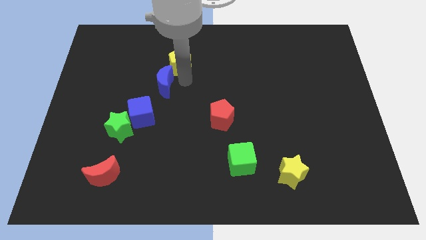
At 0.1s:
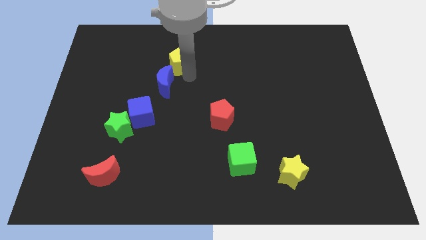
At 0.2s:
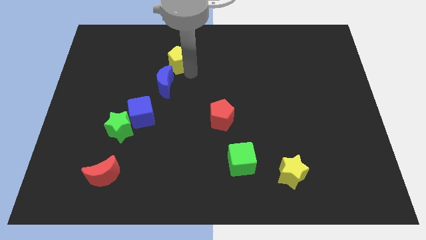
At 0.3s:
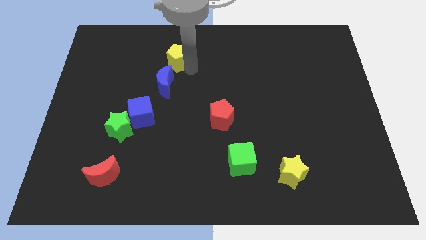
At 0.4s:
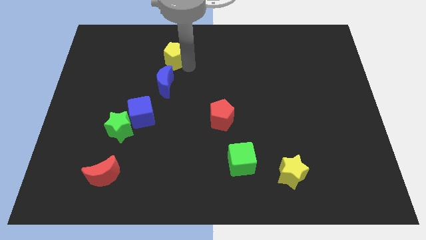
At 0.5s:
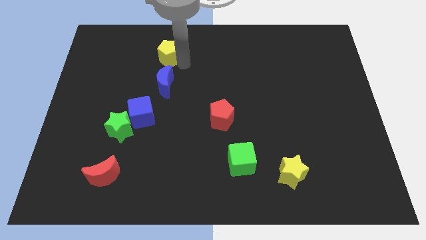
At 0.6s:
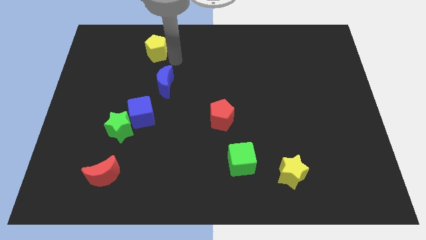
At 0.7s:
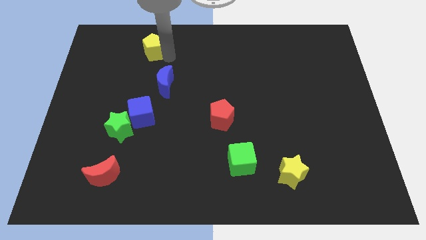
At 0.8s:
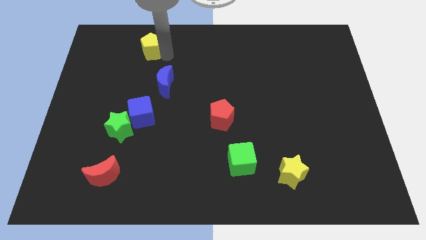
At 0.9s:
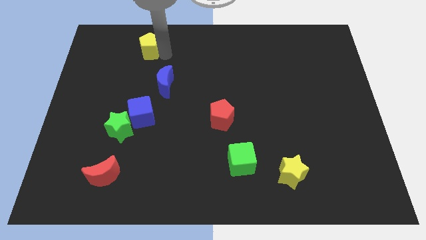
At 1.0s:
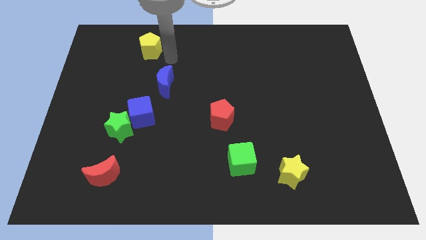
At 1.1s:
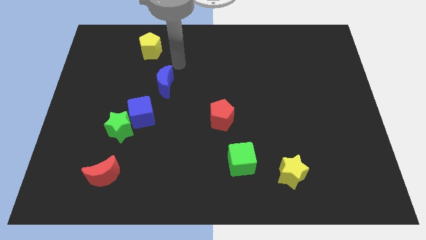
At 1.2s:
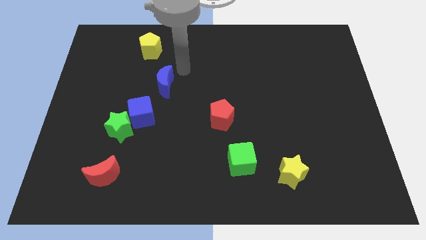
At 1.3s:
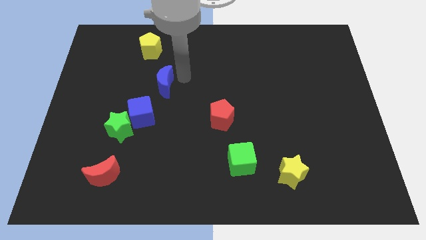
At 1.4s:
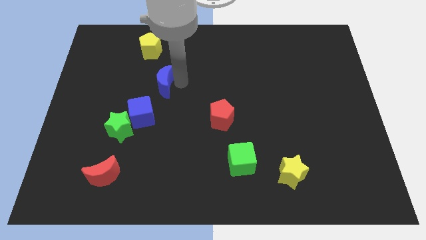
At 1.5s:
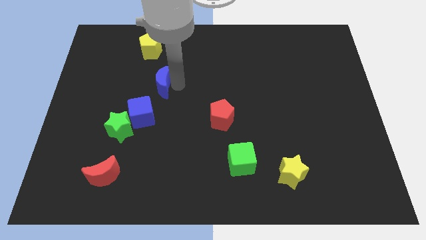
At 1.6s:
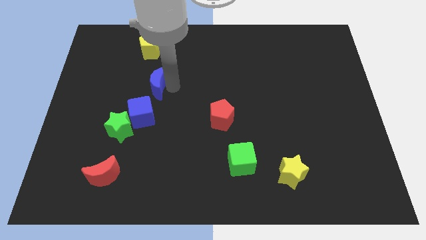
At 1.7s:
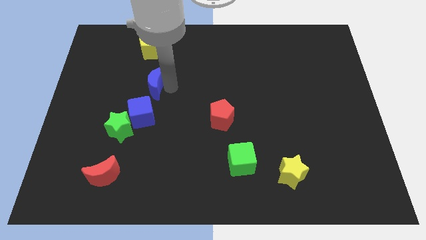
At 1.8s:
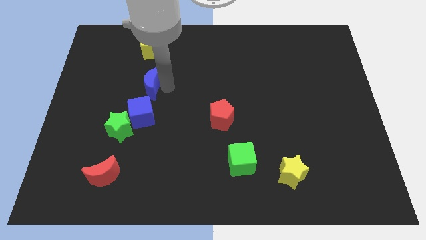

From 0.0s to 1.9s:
push the yellow pentagon towards the top of the board

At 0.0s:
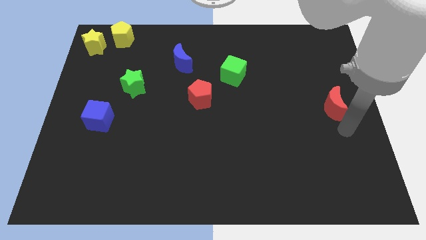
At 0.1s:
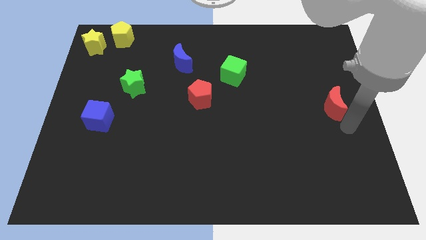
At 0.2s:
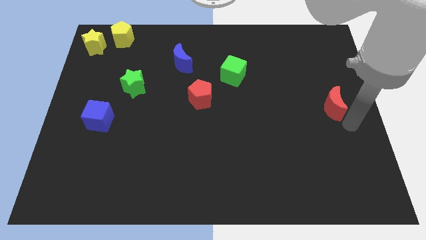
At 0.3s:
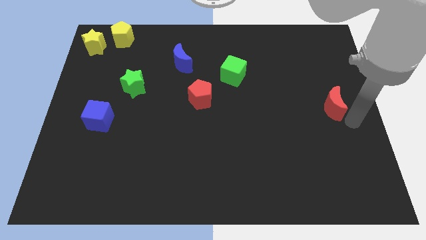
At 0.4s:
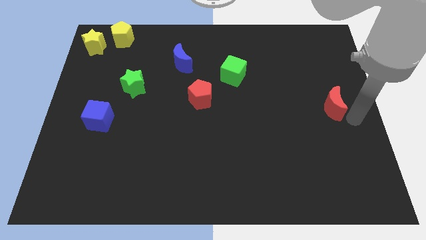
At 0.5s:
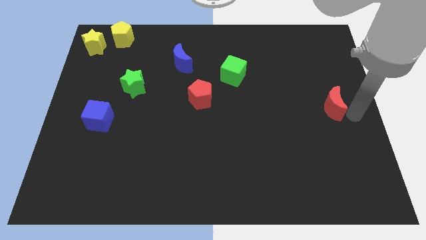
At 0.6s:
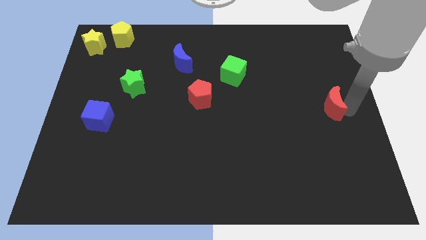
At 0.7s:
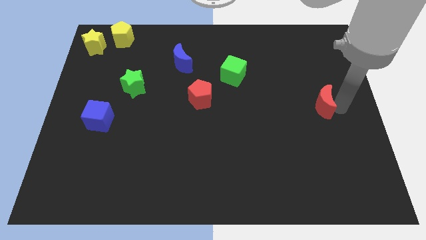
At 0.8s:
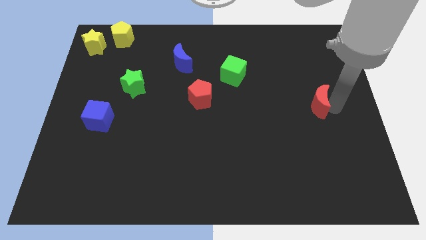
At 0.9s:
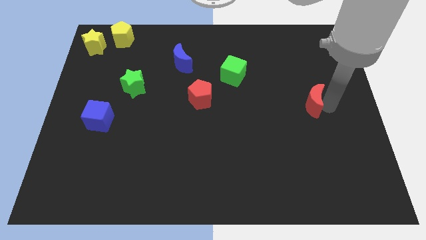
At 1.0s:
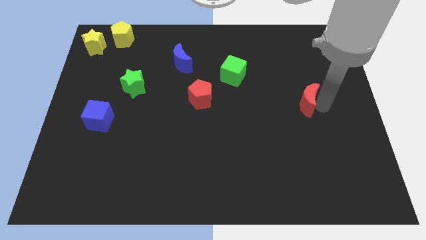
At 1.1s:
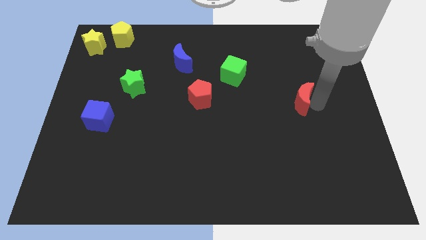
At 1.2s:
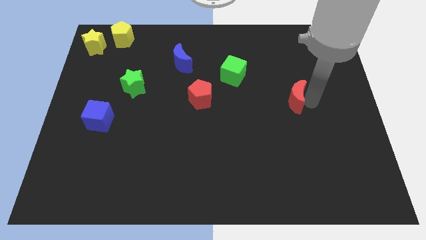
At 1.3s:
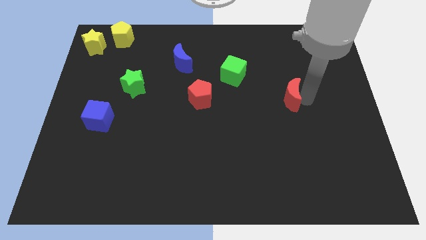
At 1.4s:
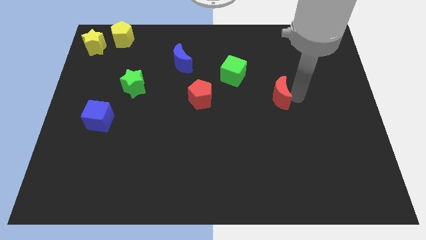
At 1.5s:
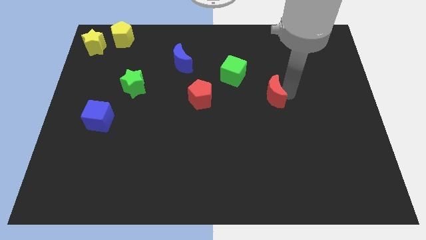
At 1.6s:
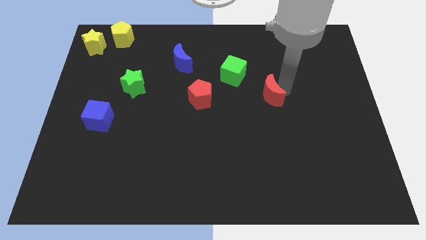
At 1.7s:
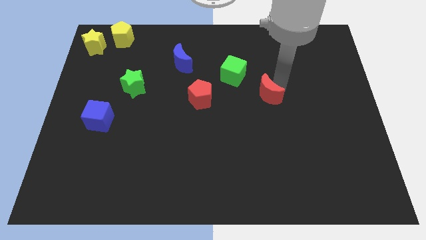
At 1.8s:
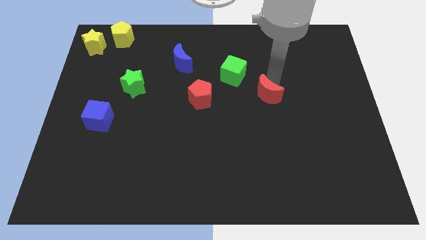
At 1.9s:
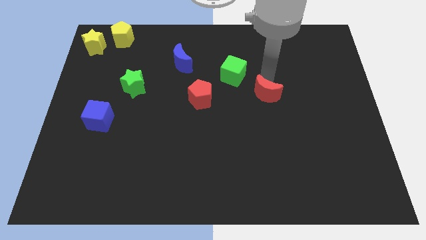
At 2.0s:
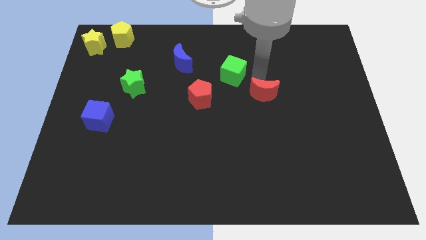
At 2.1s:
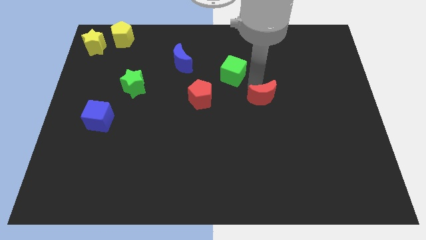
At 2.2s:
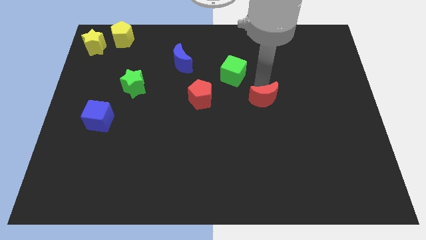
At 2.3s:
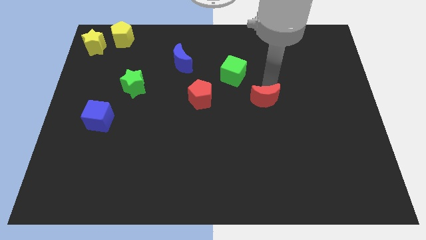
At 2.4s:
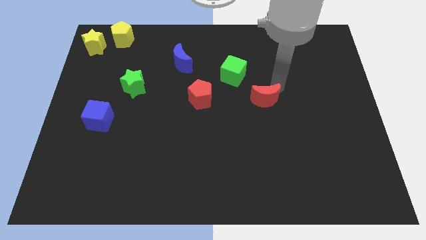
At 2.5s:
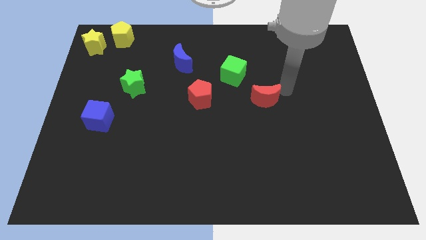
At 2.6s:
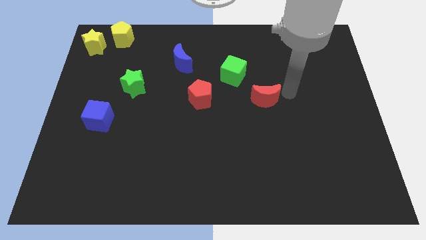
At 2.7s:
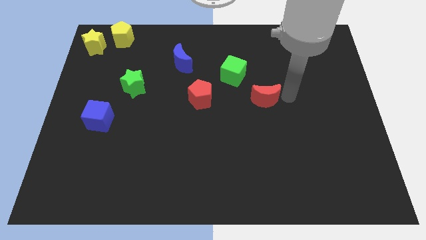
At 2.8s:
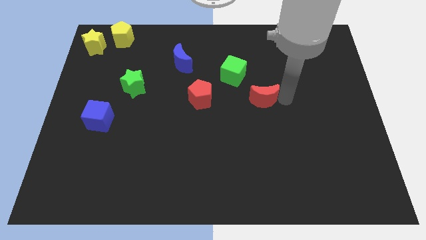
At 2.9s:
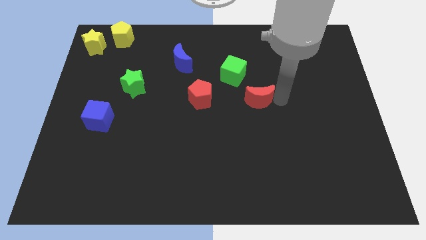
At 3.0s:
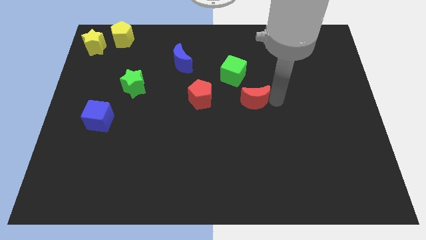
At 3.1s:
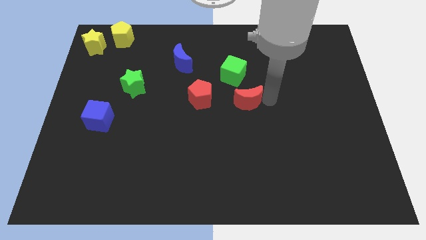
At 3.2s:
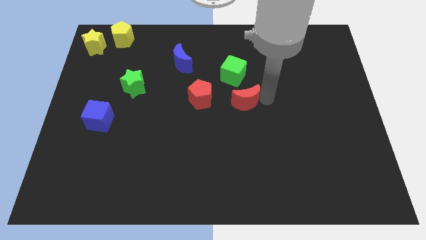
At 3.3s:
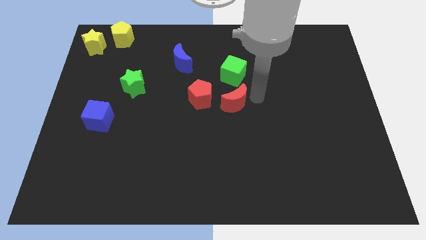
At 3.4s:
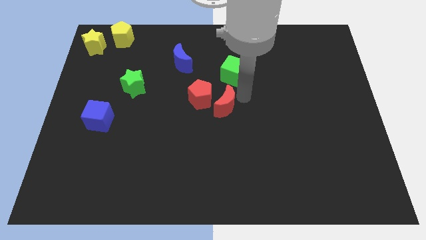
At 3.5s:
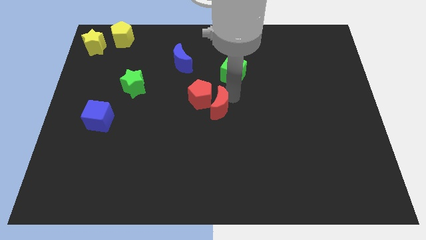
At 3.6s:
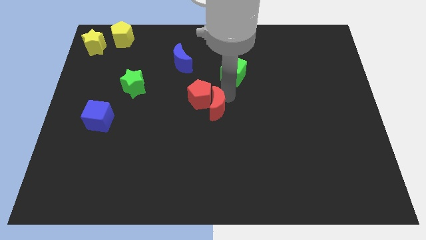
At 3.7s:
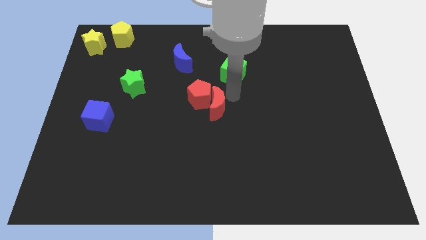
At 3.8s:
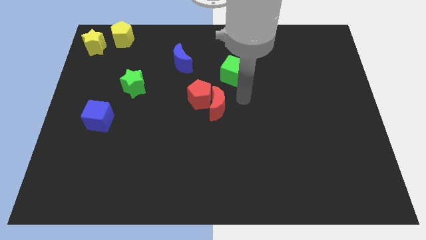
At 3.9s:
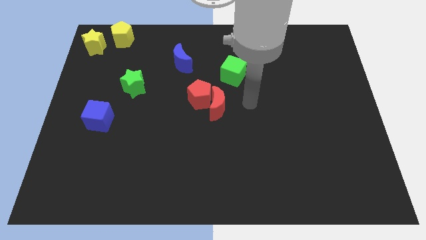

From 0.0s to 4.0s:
push the red moon into the red pentagon

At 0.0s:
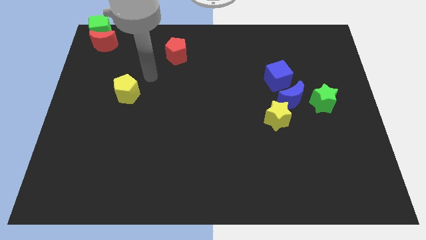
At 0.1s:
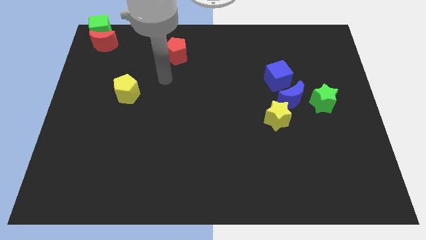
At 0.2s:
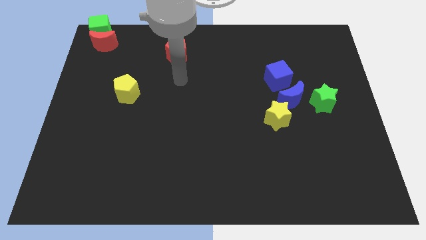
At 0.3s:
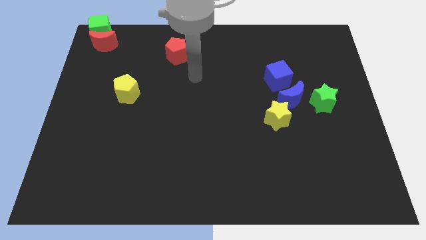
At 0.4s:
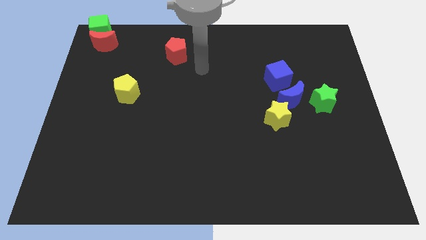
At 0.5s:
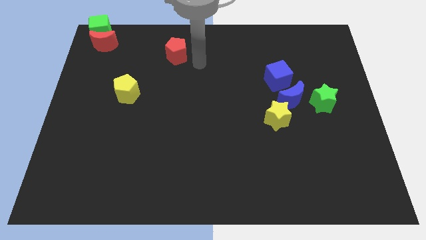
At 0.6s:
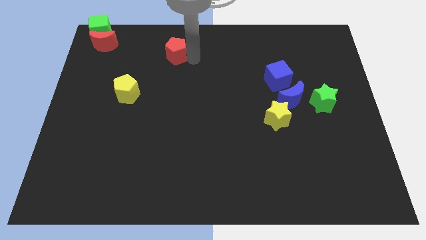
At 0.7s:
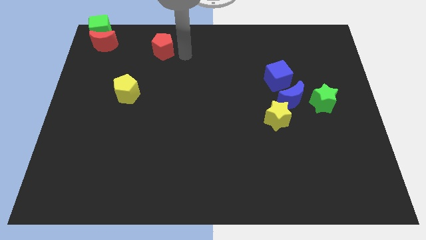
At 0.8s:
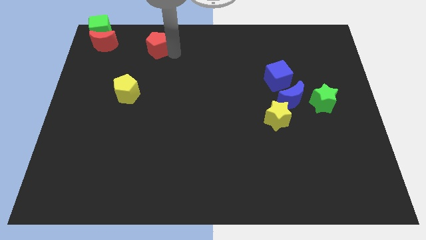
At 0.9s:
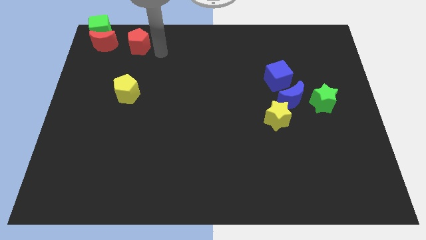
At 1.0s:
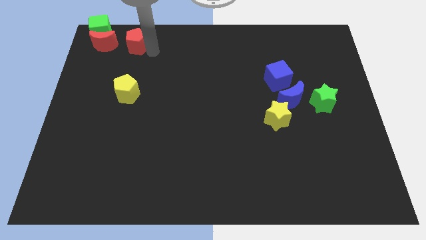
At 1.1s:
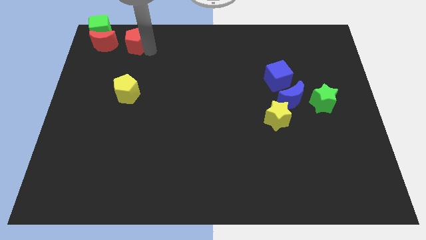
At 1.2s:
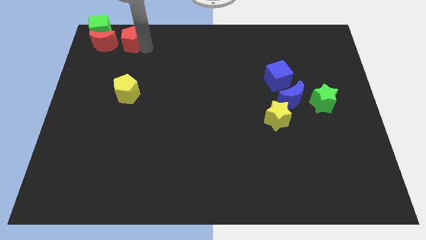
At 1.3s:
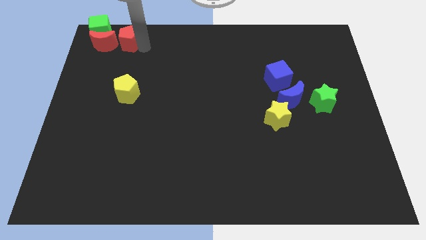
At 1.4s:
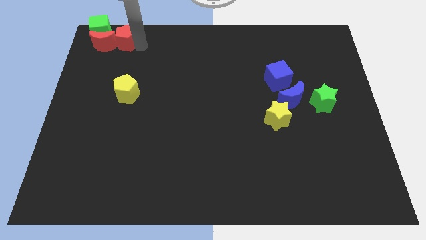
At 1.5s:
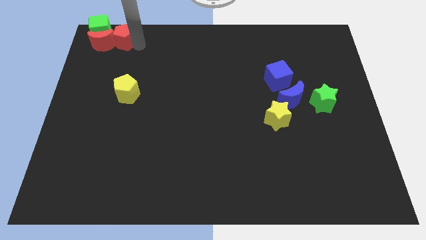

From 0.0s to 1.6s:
place the red pentagon to the right side of the red moon

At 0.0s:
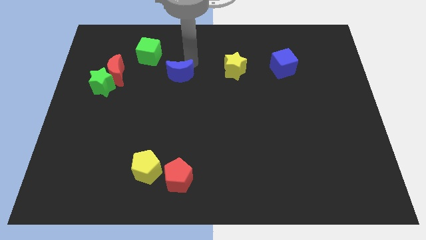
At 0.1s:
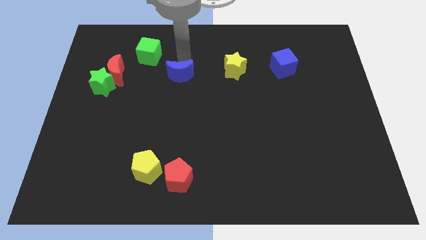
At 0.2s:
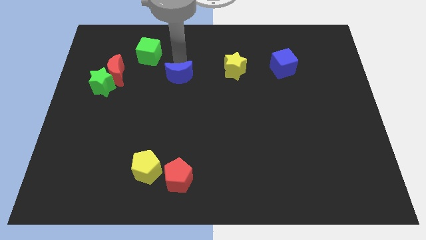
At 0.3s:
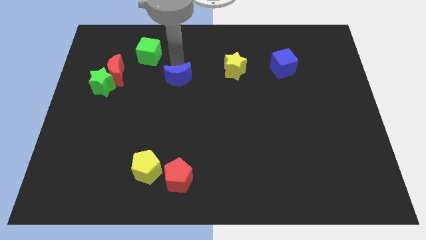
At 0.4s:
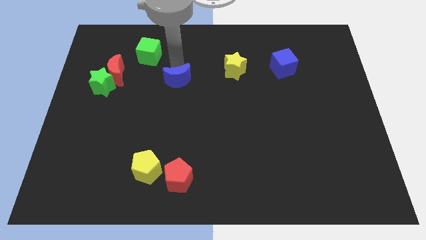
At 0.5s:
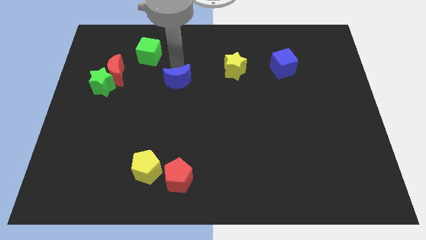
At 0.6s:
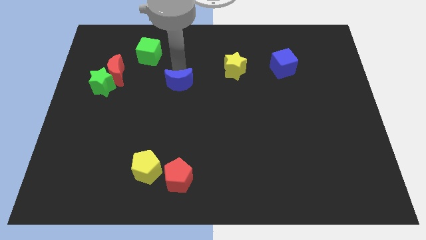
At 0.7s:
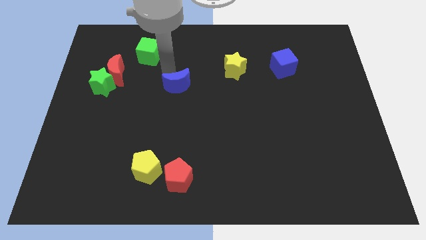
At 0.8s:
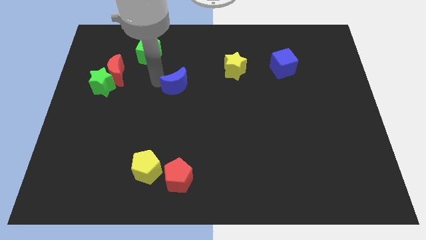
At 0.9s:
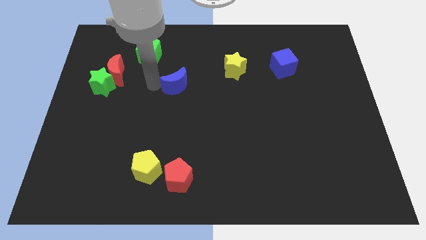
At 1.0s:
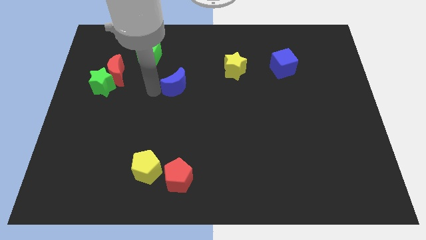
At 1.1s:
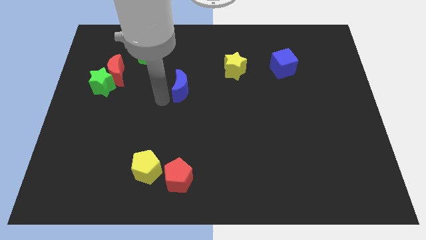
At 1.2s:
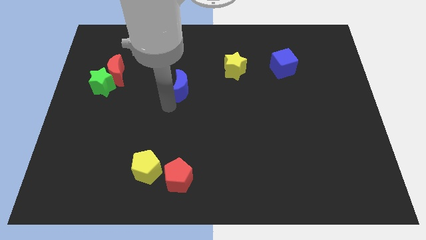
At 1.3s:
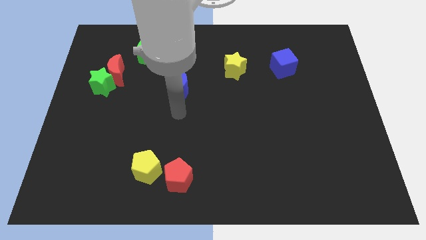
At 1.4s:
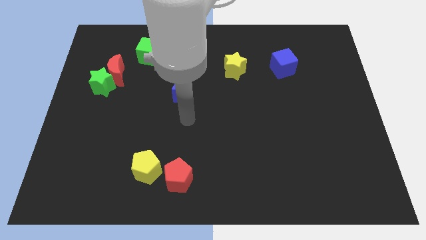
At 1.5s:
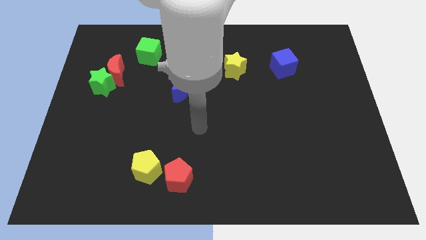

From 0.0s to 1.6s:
place the blue crescent above the red pentagon
